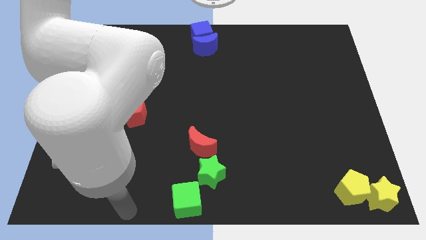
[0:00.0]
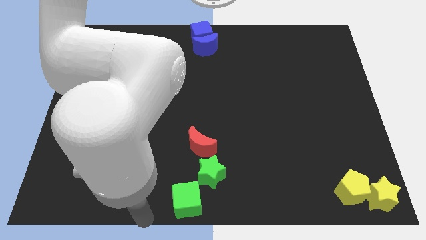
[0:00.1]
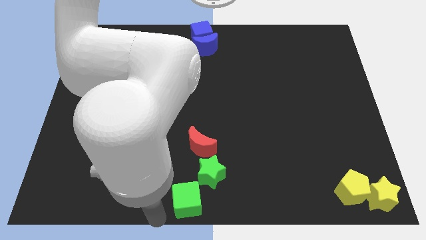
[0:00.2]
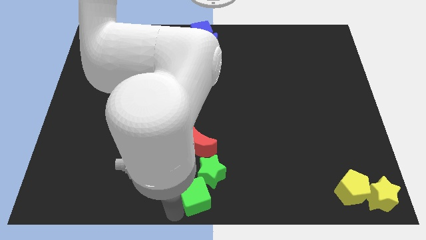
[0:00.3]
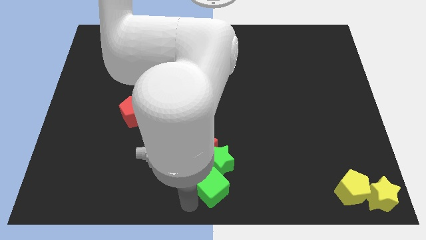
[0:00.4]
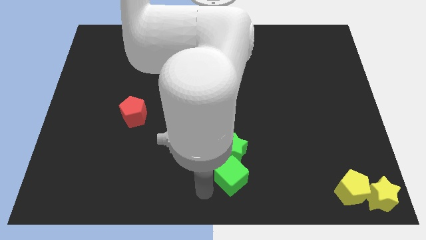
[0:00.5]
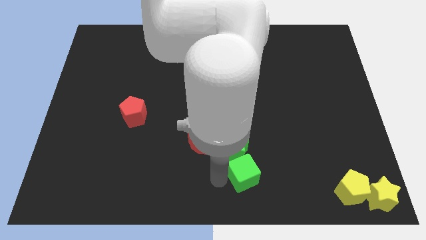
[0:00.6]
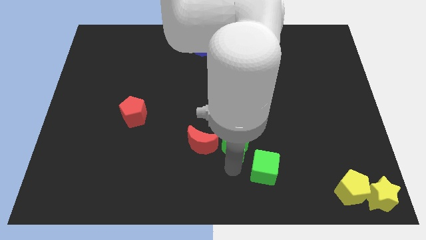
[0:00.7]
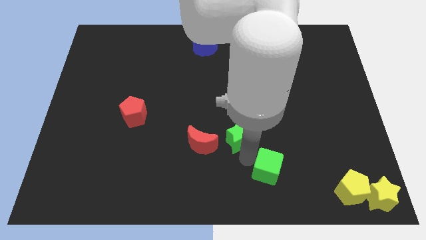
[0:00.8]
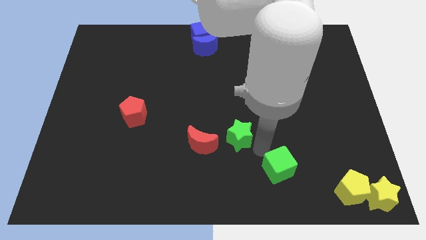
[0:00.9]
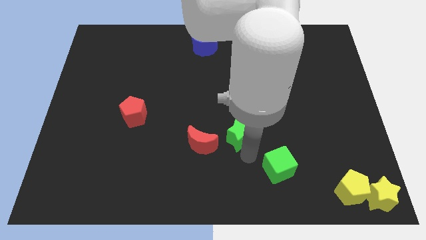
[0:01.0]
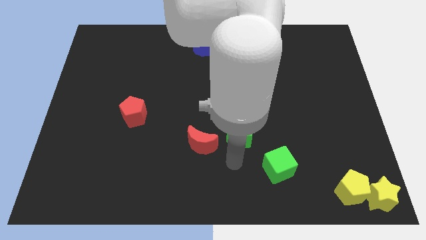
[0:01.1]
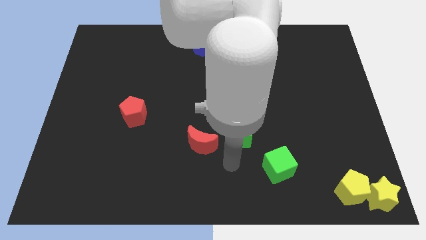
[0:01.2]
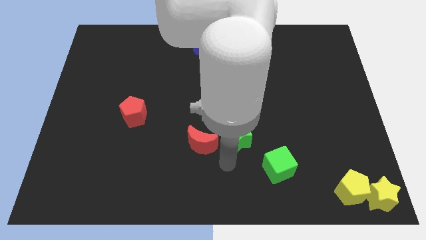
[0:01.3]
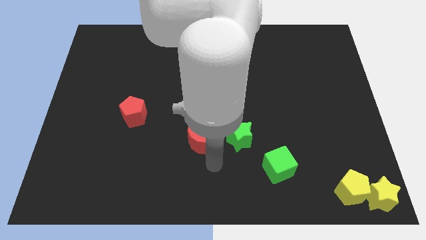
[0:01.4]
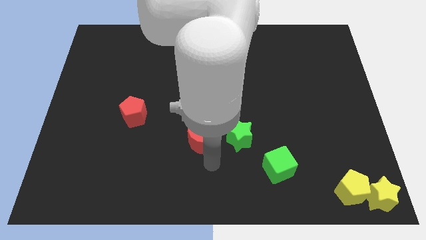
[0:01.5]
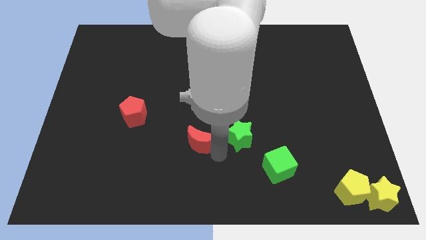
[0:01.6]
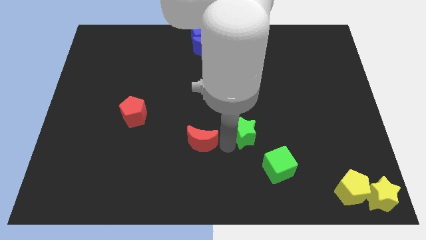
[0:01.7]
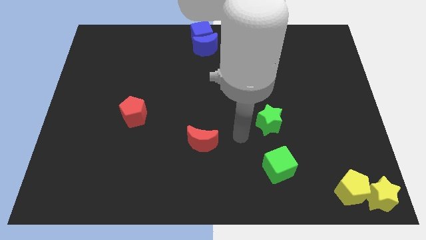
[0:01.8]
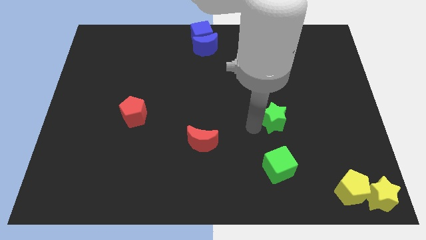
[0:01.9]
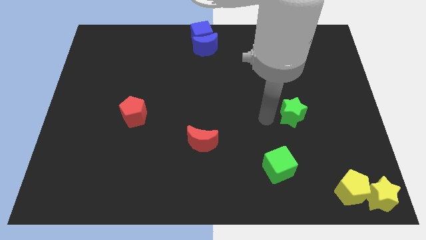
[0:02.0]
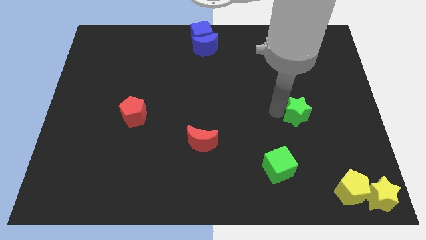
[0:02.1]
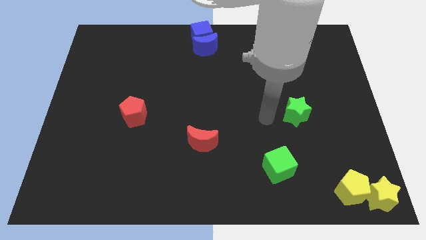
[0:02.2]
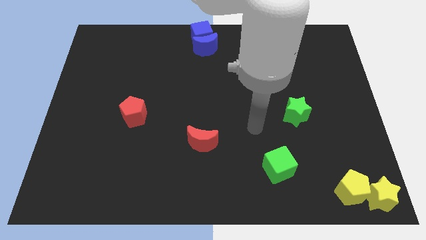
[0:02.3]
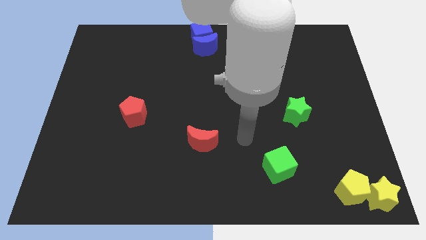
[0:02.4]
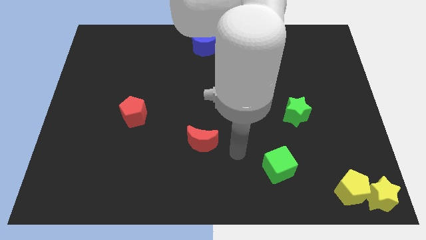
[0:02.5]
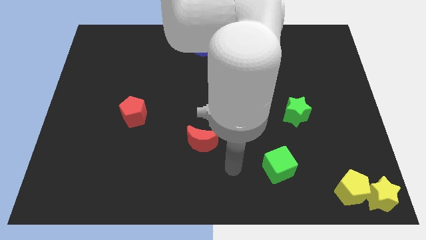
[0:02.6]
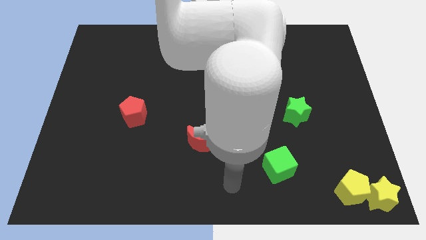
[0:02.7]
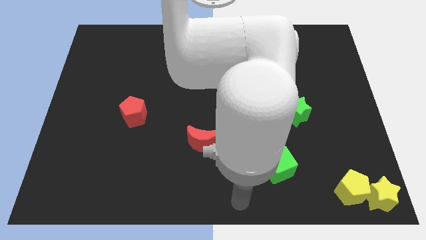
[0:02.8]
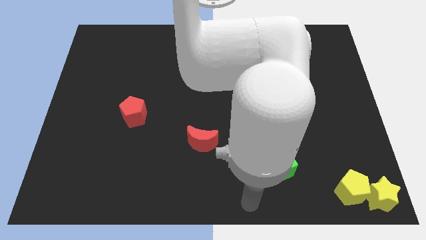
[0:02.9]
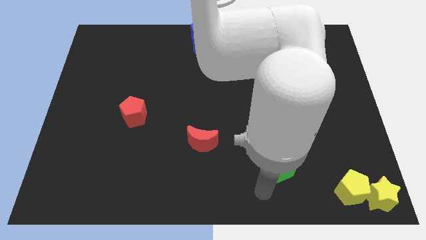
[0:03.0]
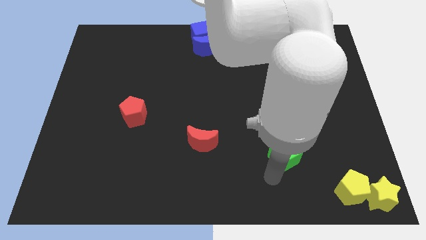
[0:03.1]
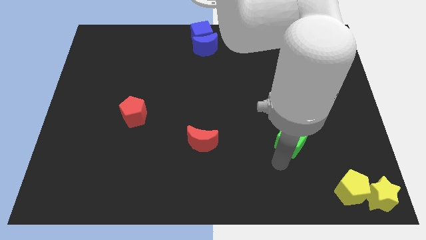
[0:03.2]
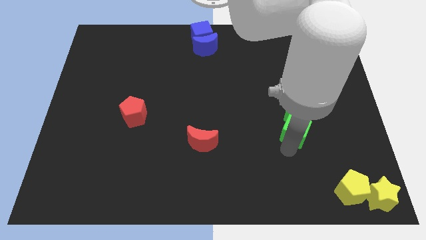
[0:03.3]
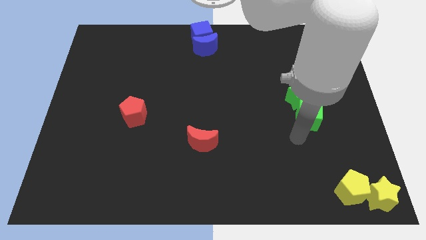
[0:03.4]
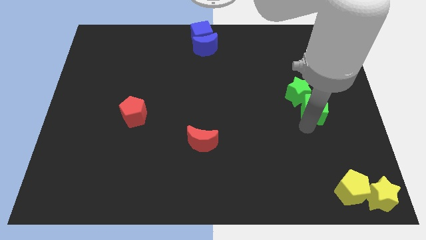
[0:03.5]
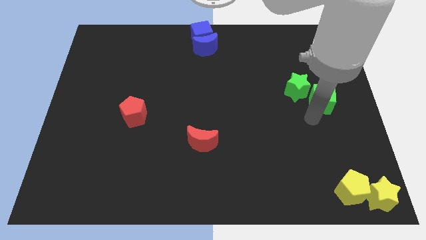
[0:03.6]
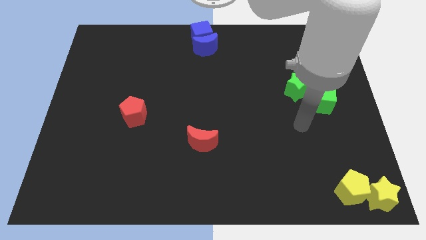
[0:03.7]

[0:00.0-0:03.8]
place the green blocks diagonally to the top side of the yellow blocks

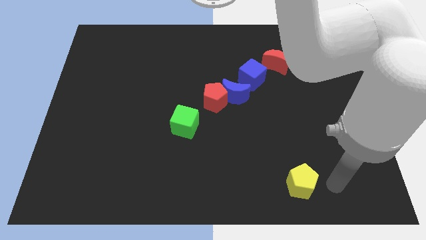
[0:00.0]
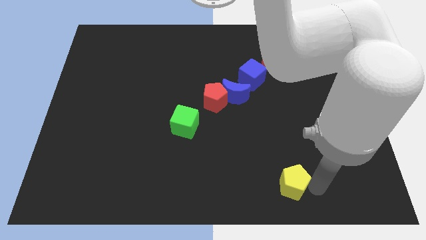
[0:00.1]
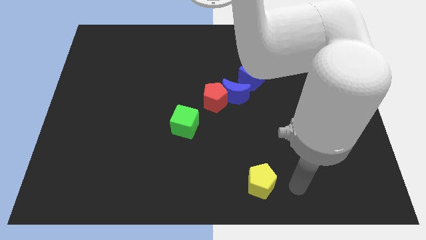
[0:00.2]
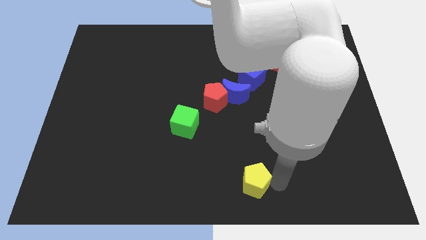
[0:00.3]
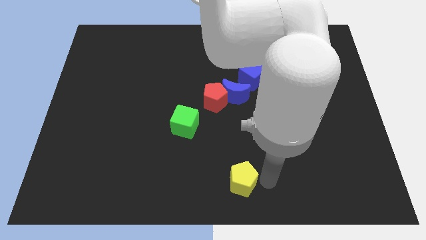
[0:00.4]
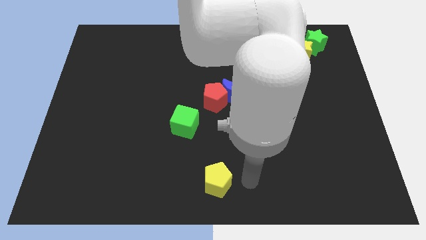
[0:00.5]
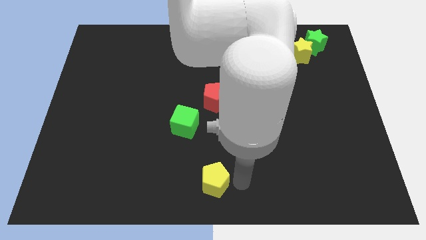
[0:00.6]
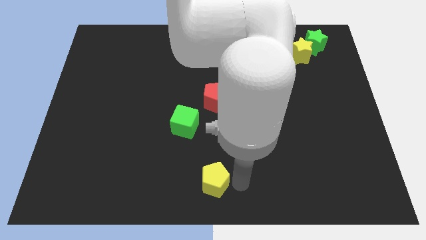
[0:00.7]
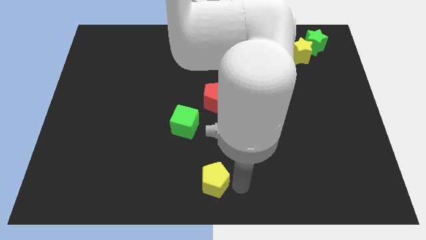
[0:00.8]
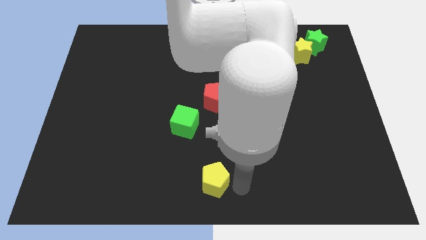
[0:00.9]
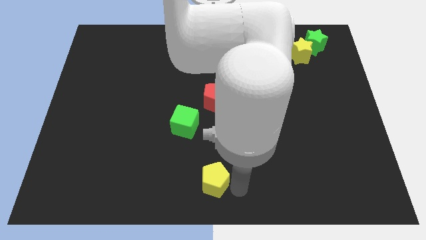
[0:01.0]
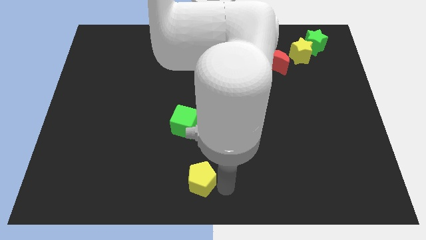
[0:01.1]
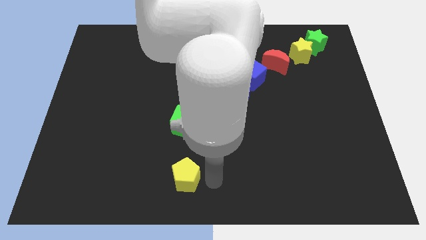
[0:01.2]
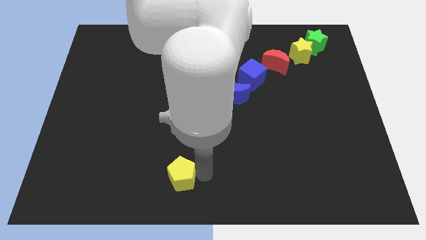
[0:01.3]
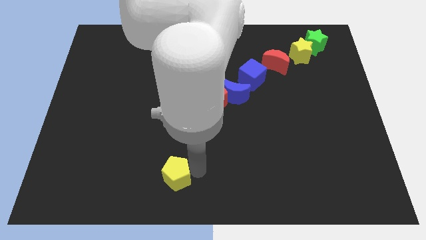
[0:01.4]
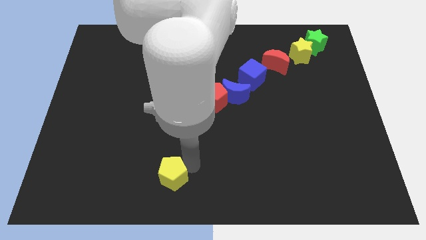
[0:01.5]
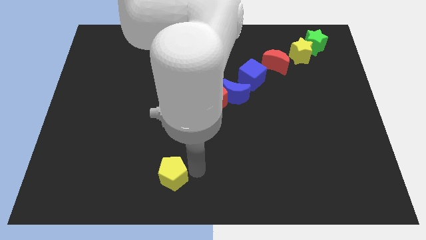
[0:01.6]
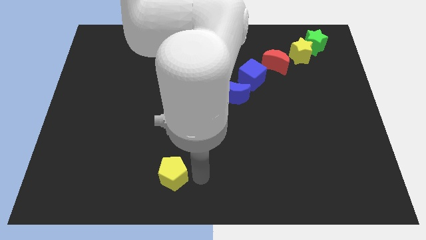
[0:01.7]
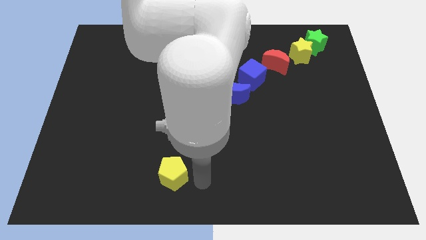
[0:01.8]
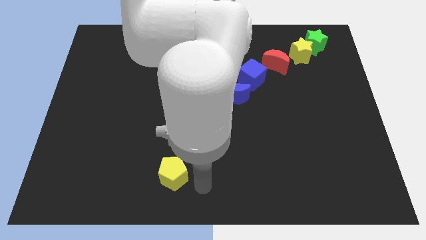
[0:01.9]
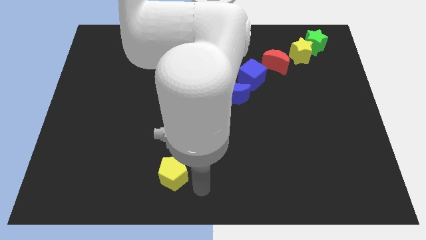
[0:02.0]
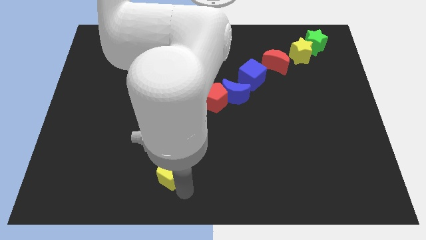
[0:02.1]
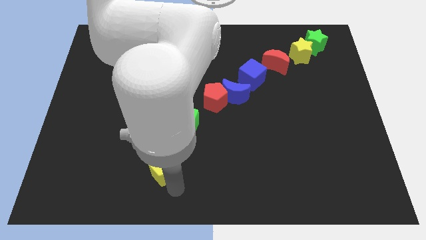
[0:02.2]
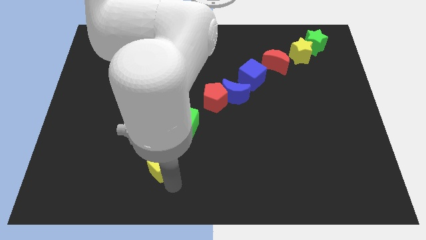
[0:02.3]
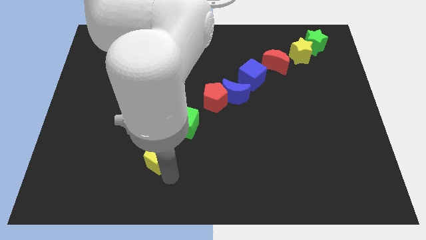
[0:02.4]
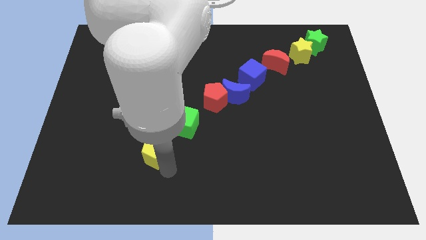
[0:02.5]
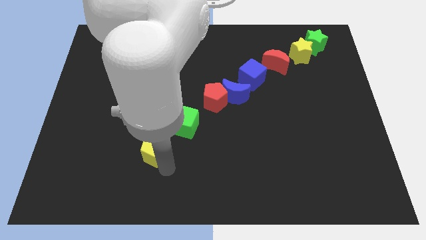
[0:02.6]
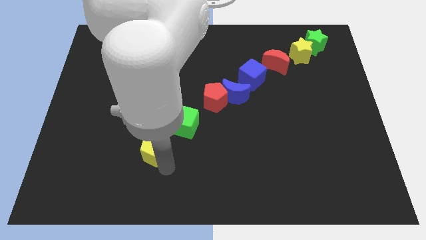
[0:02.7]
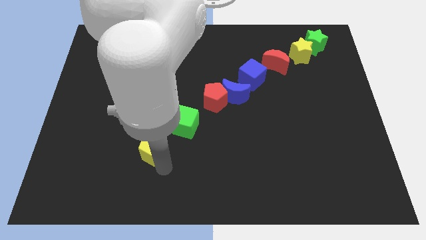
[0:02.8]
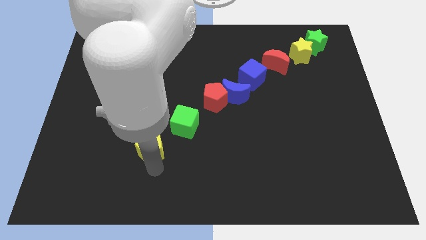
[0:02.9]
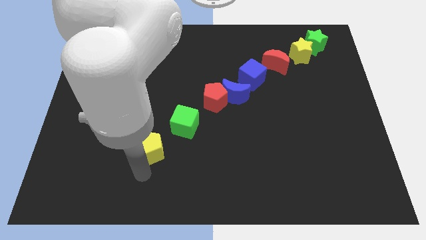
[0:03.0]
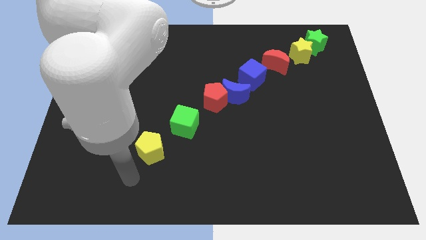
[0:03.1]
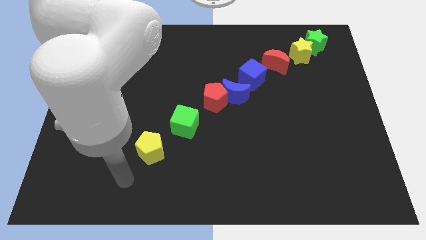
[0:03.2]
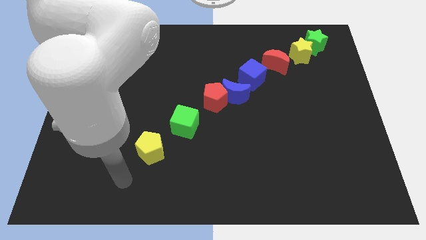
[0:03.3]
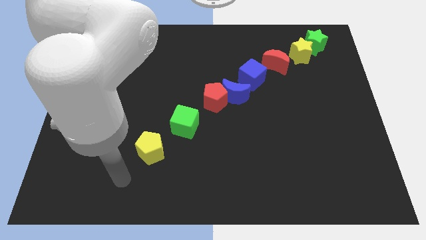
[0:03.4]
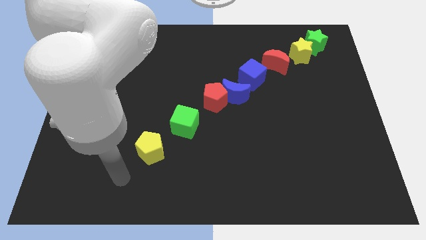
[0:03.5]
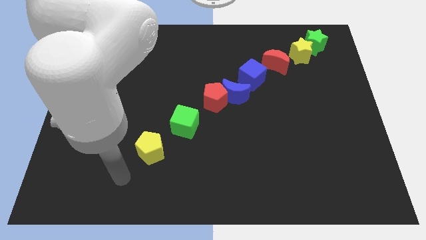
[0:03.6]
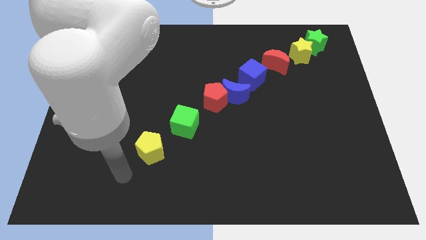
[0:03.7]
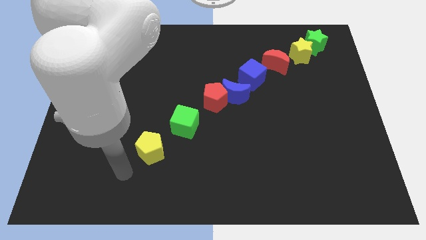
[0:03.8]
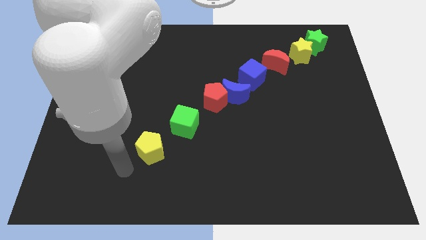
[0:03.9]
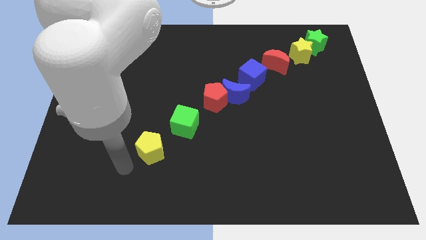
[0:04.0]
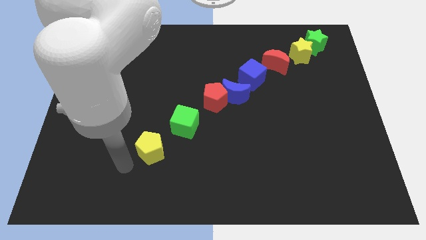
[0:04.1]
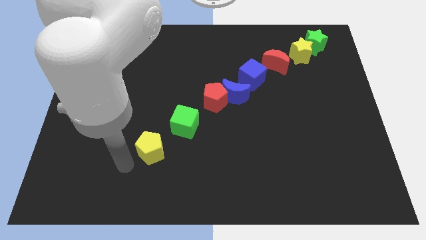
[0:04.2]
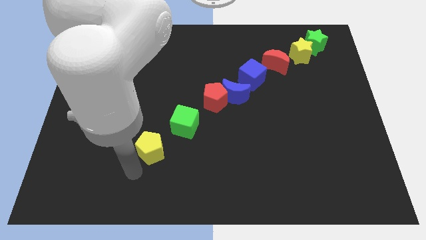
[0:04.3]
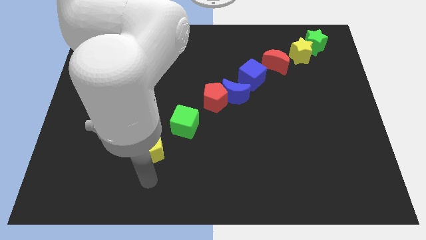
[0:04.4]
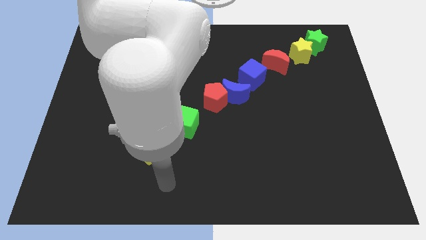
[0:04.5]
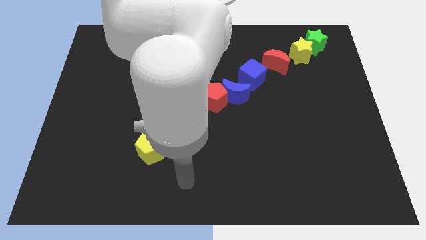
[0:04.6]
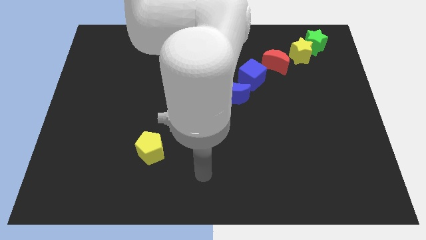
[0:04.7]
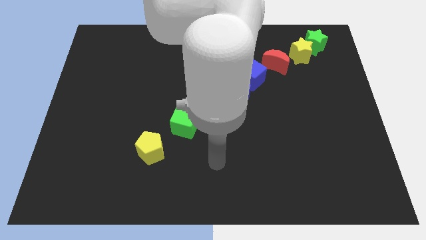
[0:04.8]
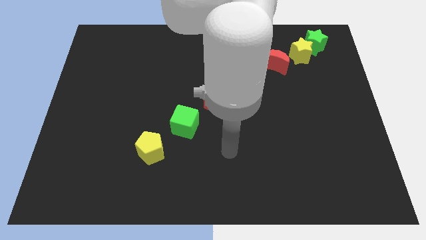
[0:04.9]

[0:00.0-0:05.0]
push yellow pentagon to the bottom left of green cube to form a diagonal line

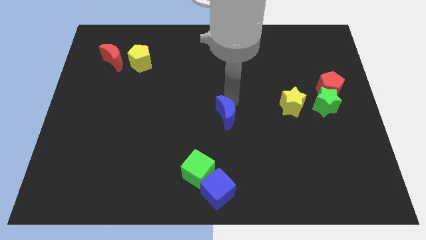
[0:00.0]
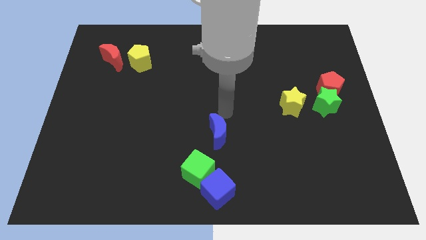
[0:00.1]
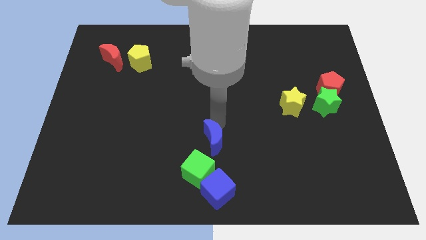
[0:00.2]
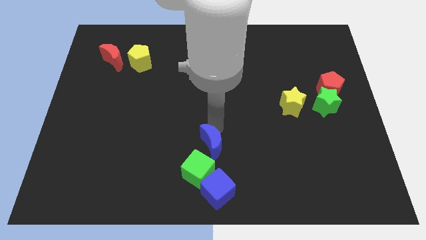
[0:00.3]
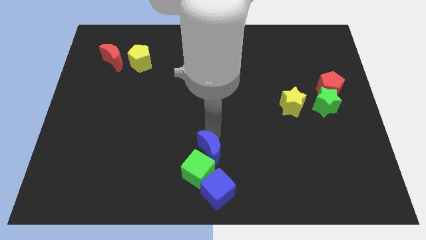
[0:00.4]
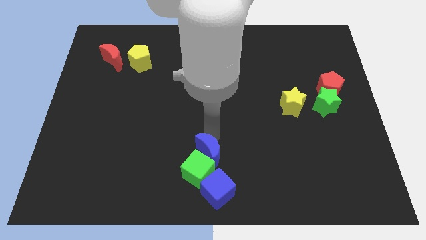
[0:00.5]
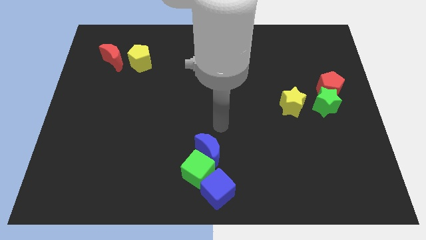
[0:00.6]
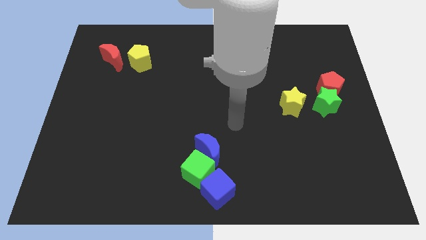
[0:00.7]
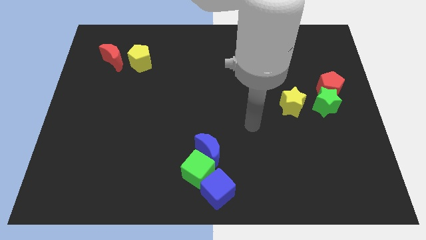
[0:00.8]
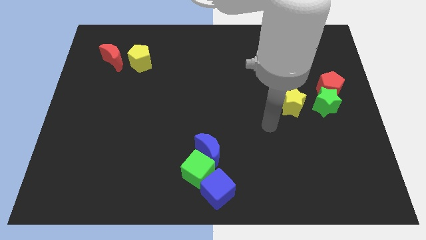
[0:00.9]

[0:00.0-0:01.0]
move the blue crescent close to the green cube
